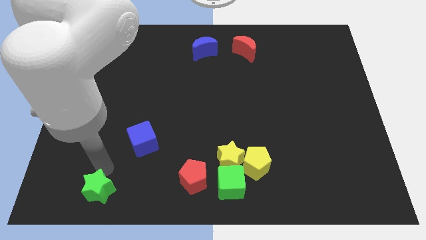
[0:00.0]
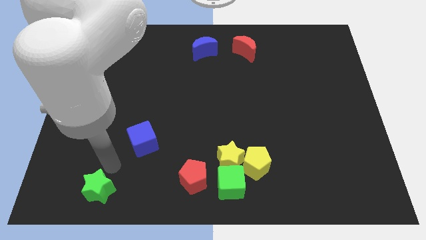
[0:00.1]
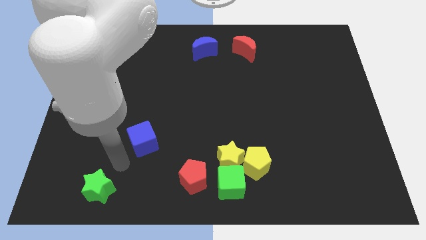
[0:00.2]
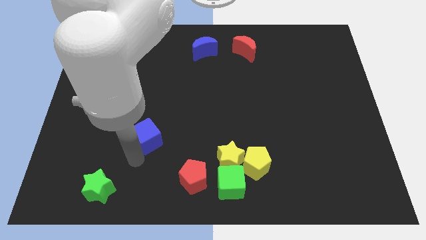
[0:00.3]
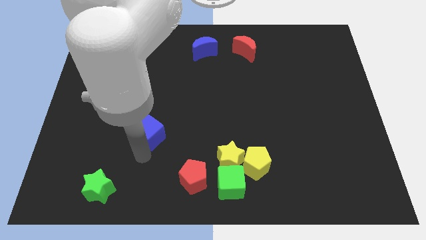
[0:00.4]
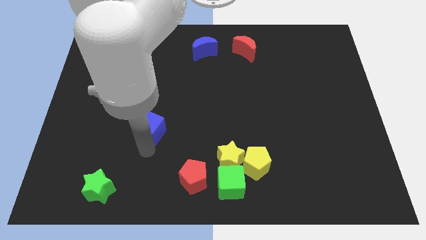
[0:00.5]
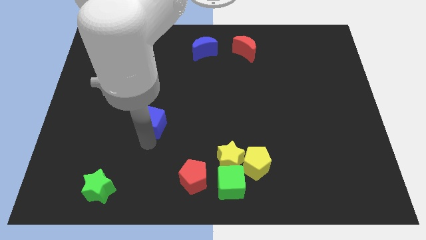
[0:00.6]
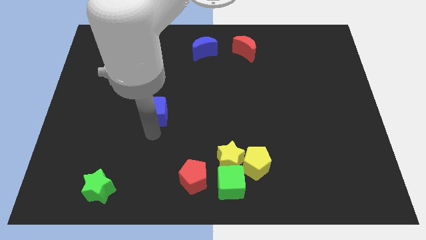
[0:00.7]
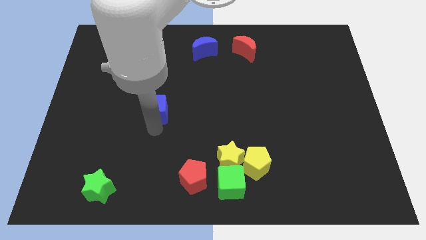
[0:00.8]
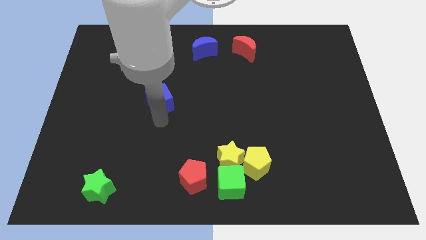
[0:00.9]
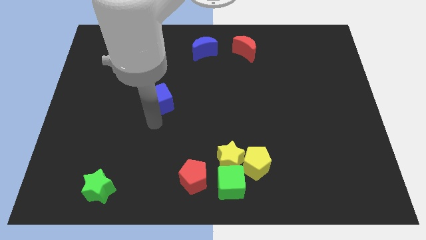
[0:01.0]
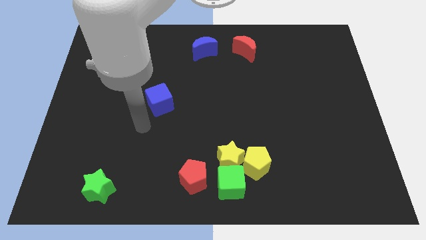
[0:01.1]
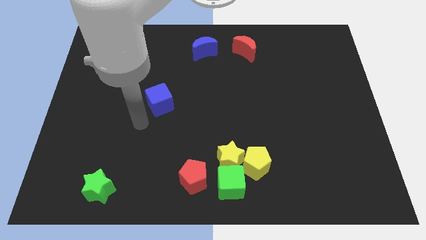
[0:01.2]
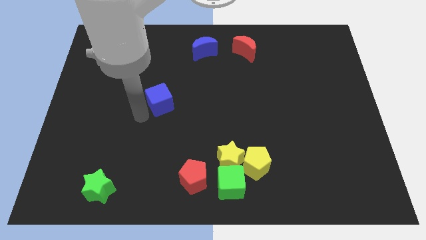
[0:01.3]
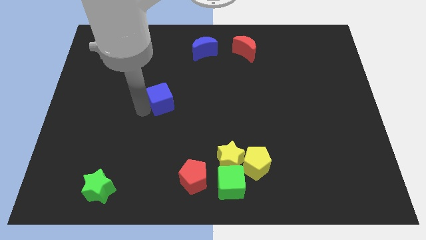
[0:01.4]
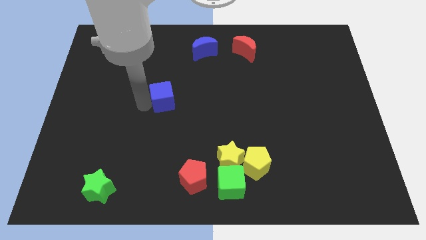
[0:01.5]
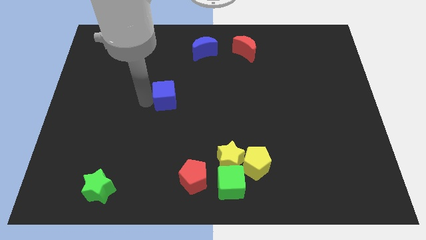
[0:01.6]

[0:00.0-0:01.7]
push the blue cube towards the top side of the board

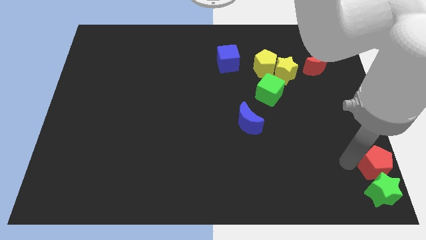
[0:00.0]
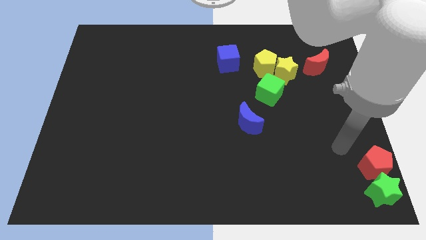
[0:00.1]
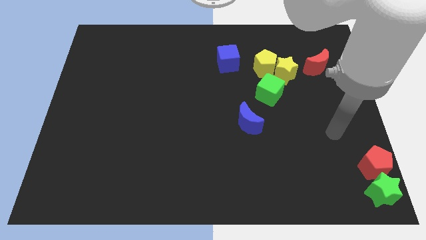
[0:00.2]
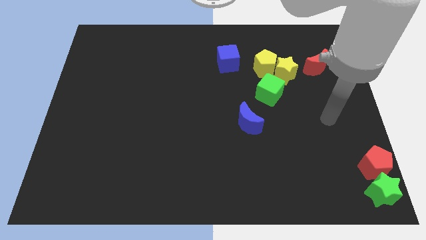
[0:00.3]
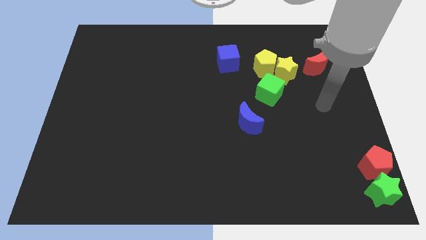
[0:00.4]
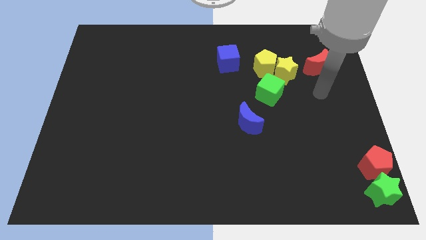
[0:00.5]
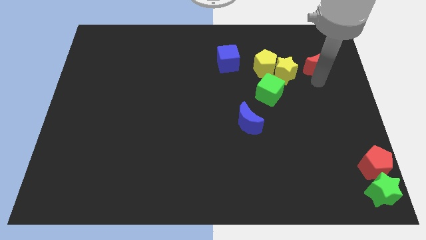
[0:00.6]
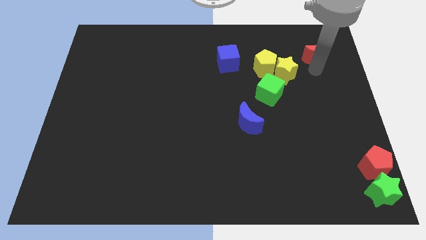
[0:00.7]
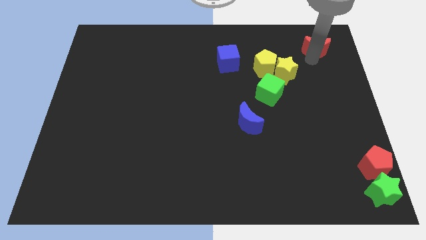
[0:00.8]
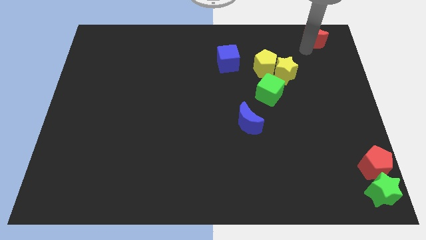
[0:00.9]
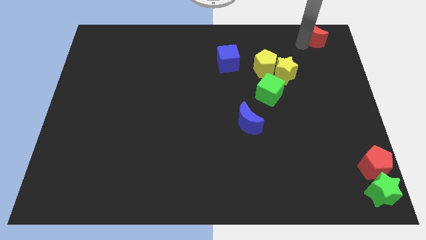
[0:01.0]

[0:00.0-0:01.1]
push the red crescent to the top right of the yellow star

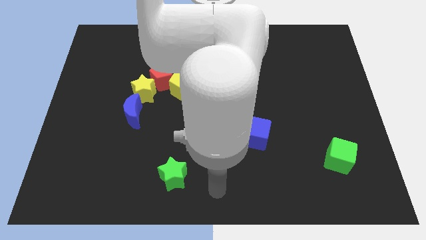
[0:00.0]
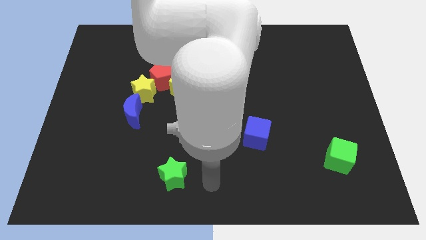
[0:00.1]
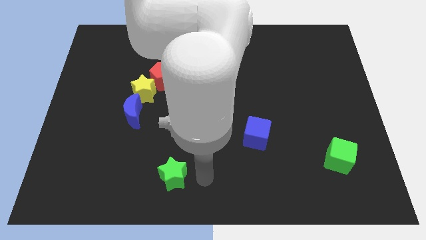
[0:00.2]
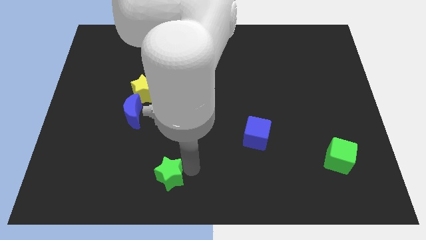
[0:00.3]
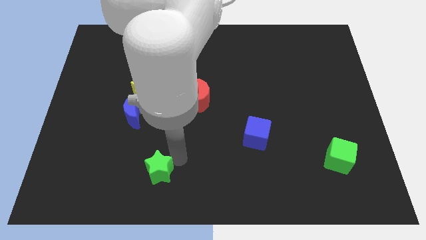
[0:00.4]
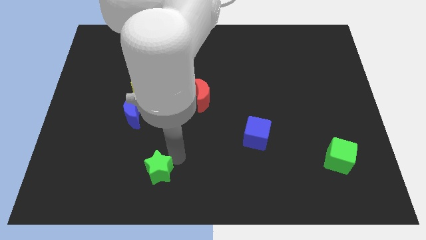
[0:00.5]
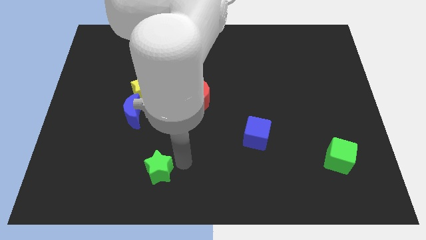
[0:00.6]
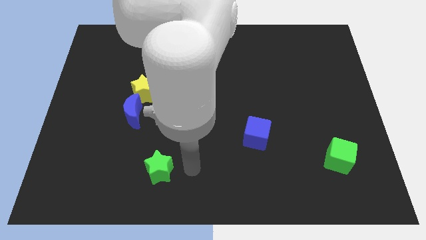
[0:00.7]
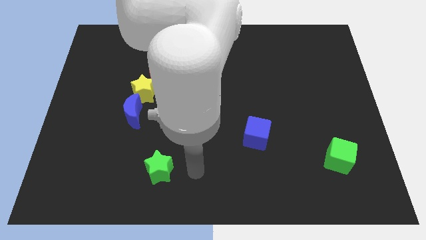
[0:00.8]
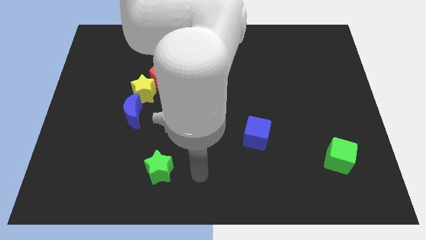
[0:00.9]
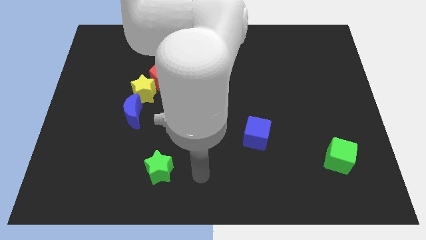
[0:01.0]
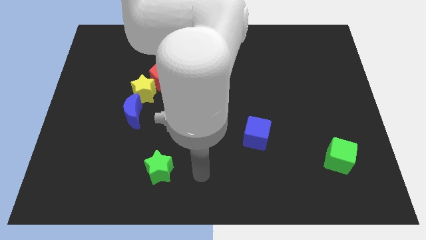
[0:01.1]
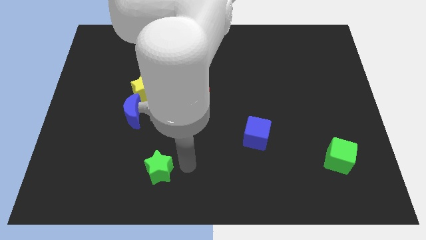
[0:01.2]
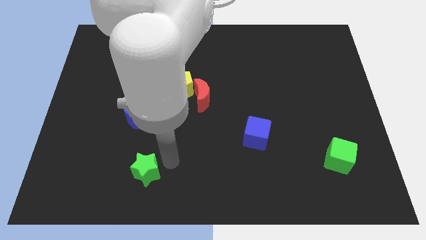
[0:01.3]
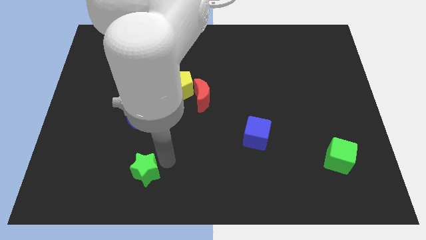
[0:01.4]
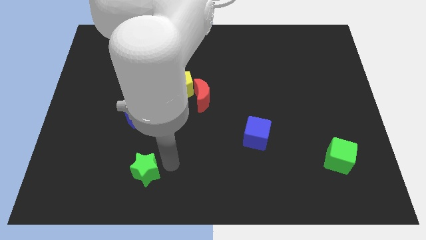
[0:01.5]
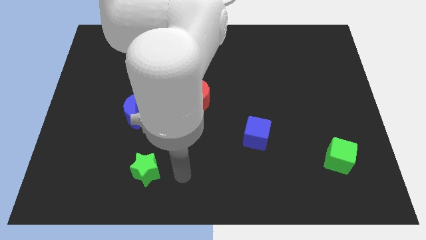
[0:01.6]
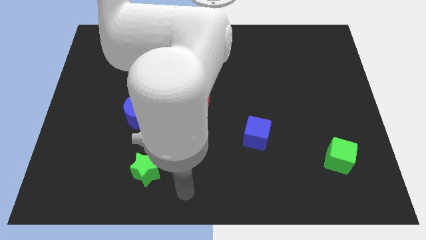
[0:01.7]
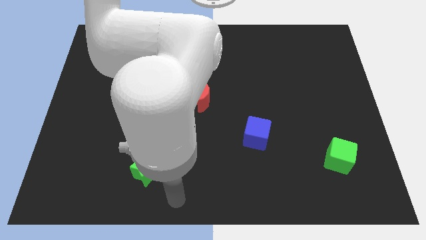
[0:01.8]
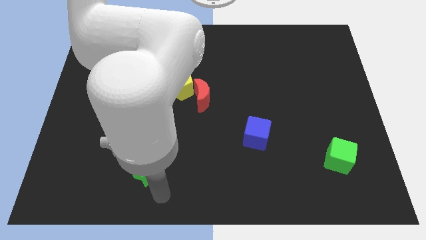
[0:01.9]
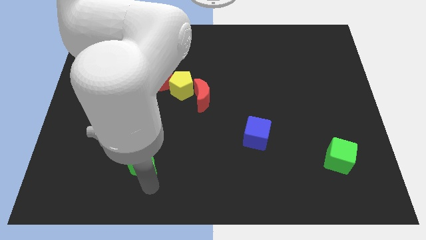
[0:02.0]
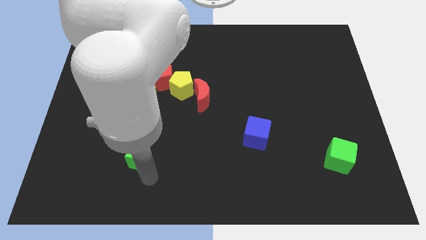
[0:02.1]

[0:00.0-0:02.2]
push green star below the blue moon

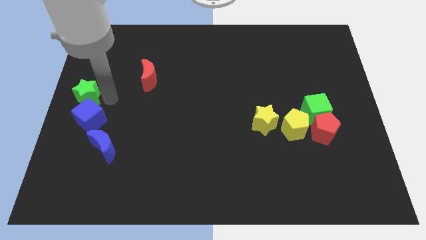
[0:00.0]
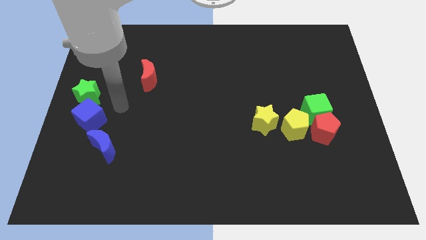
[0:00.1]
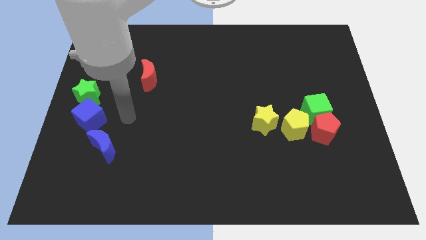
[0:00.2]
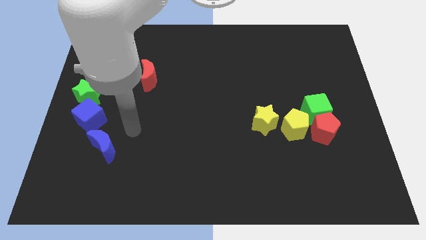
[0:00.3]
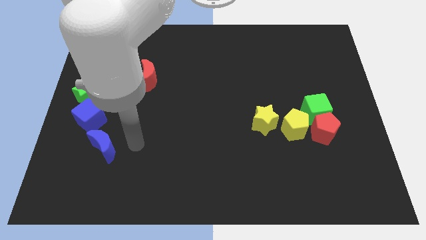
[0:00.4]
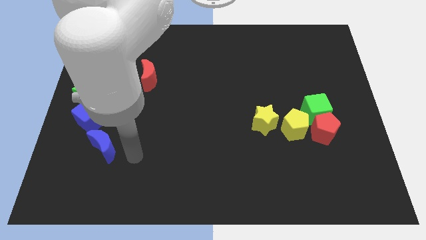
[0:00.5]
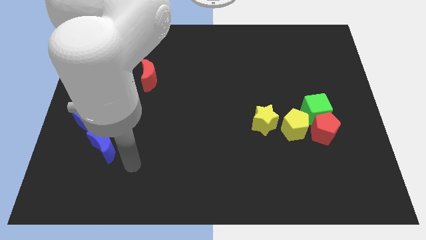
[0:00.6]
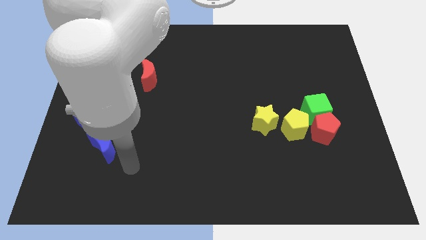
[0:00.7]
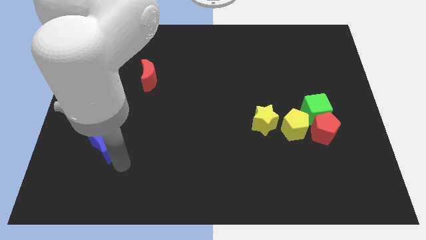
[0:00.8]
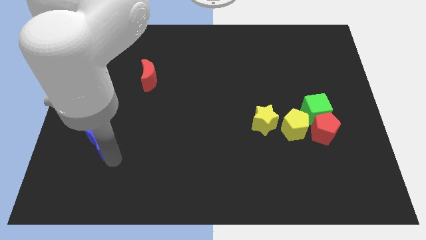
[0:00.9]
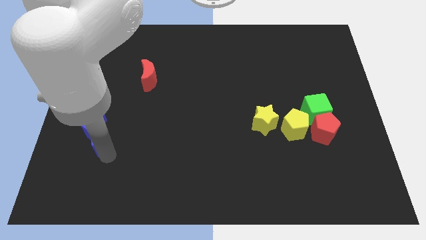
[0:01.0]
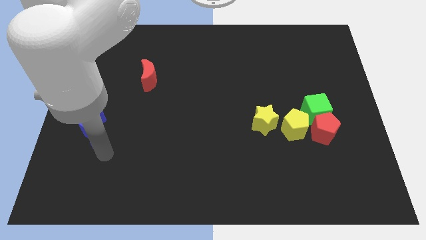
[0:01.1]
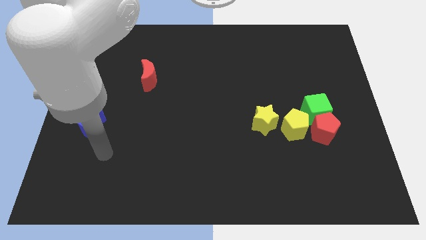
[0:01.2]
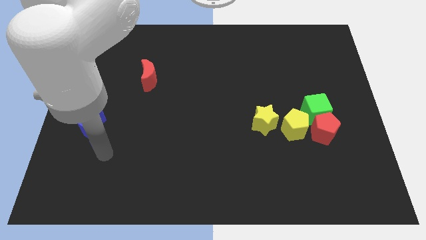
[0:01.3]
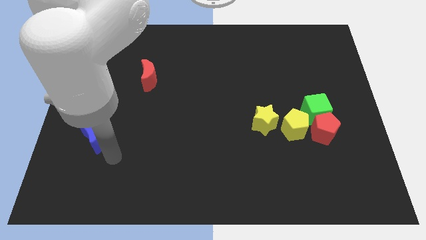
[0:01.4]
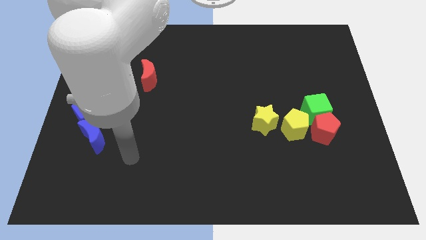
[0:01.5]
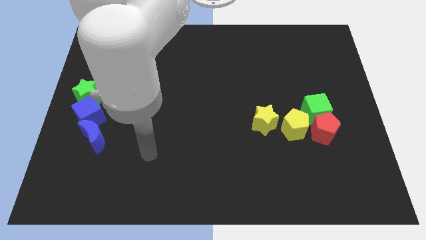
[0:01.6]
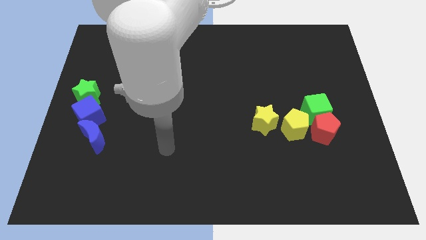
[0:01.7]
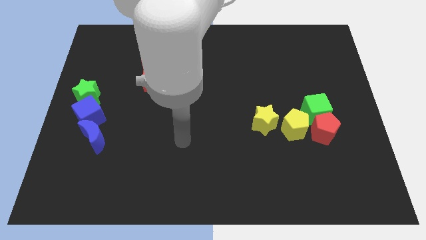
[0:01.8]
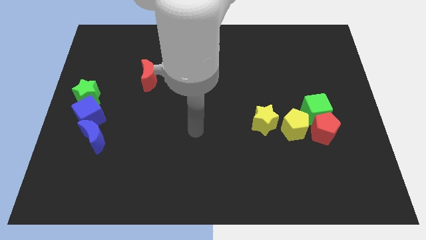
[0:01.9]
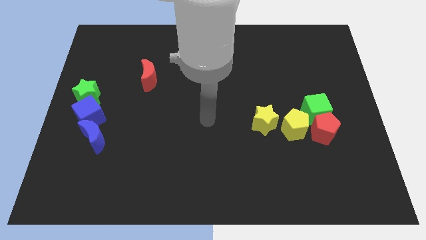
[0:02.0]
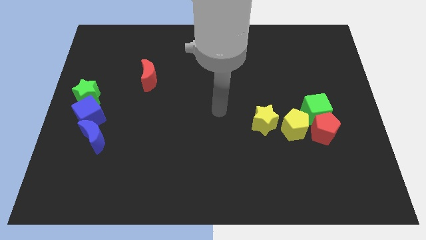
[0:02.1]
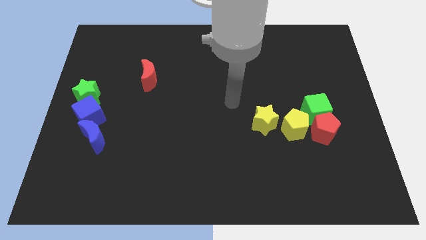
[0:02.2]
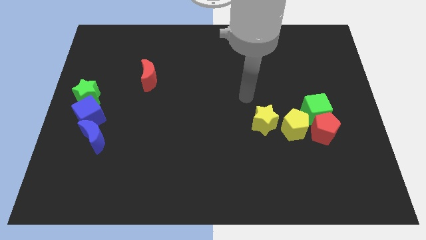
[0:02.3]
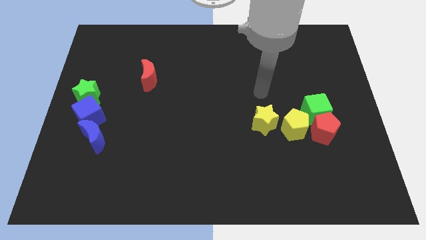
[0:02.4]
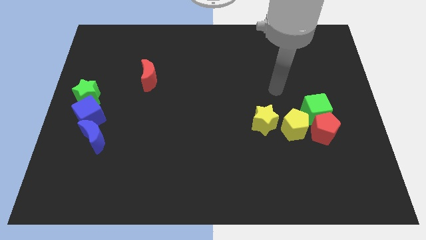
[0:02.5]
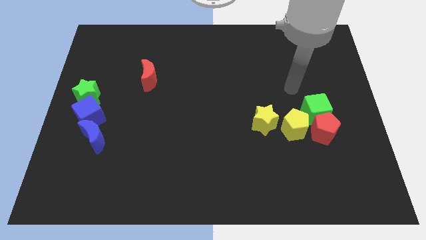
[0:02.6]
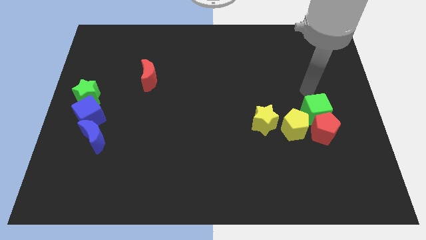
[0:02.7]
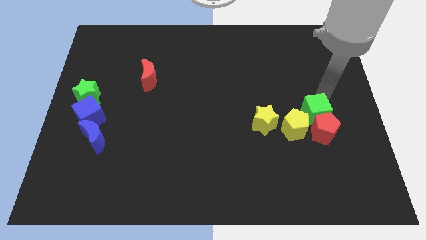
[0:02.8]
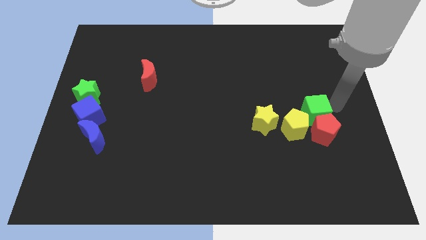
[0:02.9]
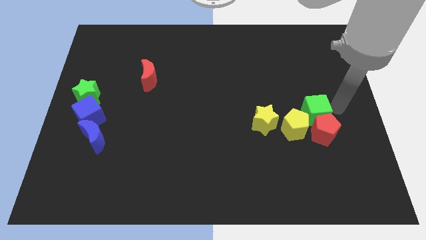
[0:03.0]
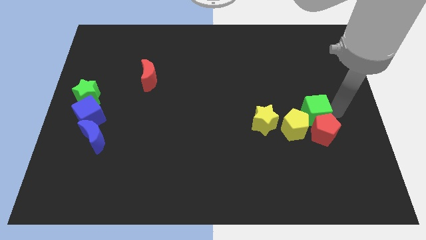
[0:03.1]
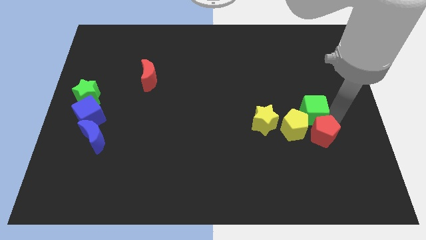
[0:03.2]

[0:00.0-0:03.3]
move the green cube slightly down

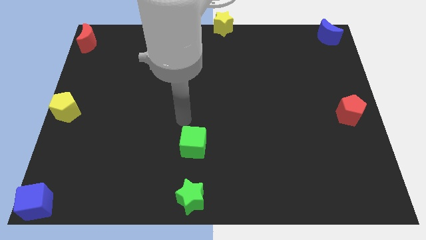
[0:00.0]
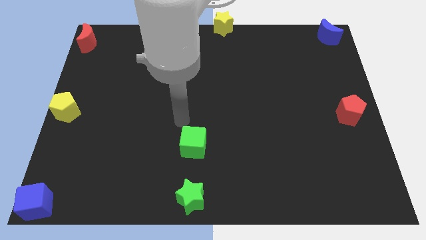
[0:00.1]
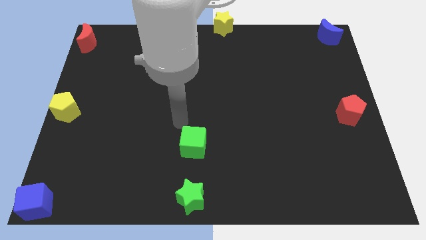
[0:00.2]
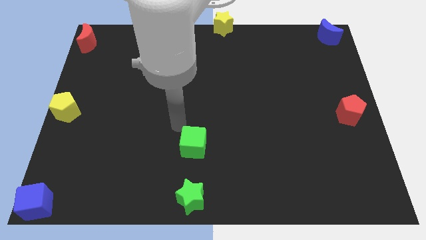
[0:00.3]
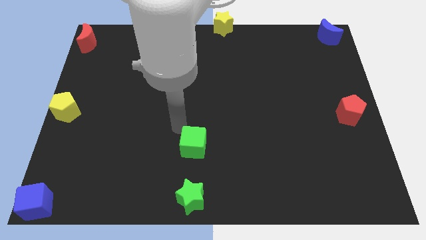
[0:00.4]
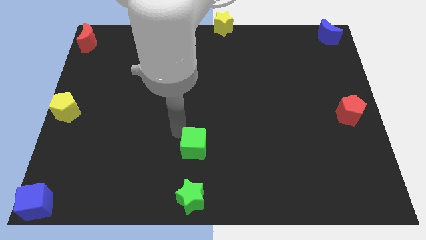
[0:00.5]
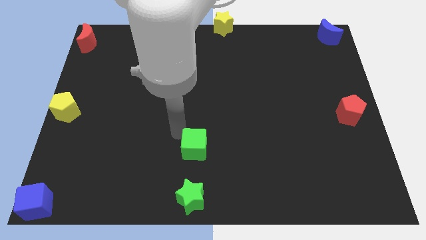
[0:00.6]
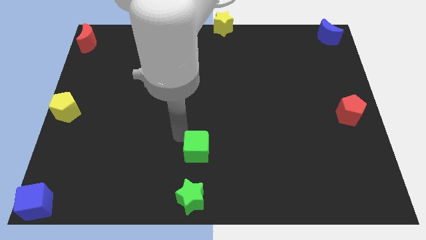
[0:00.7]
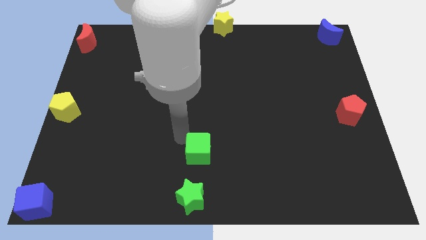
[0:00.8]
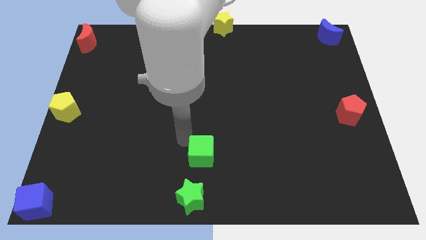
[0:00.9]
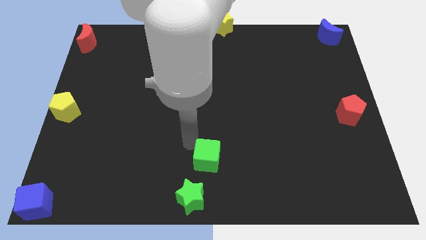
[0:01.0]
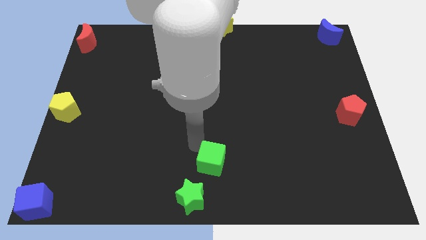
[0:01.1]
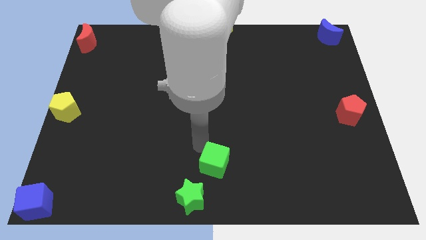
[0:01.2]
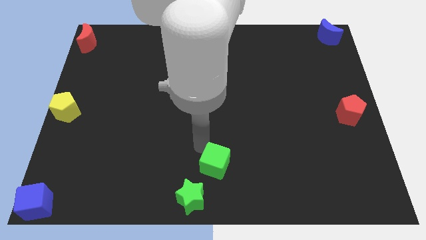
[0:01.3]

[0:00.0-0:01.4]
place green cube diagonallyabove to the green star
